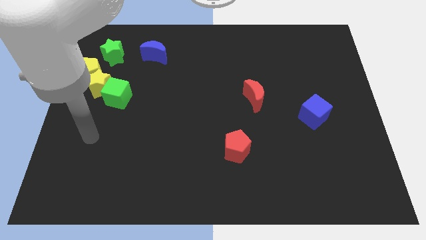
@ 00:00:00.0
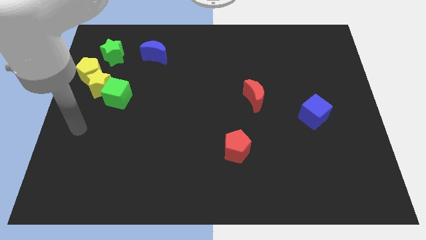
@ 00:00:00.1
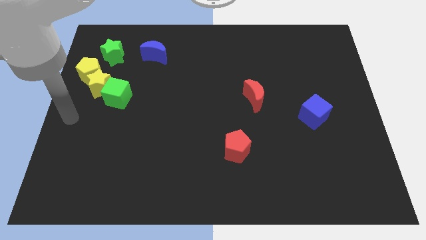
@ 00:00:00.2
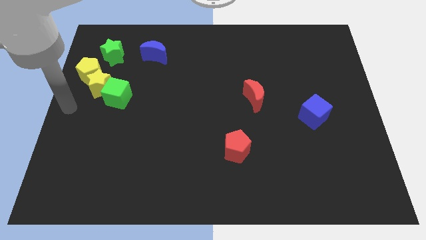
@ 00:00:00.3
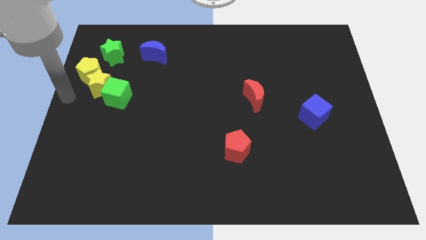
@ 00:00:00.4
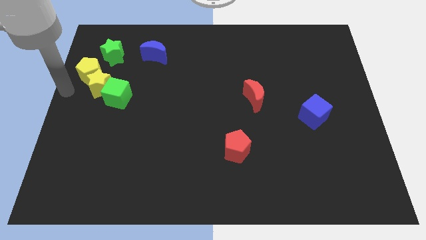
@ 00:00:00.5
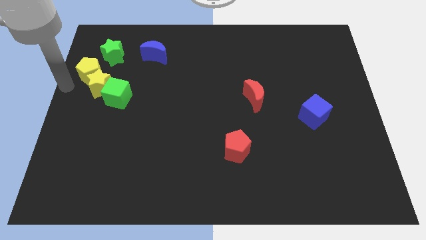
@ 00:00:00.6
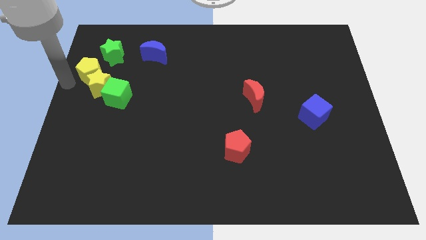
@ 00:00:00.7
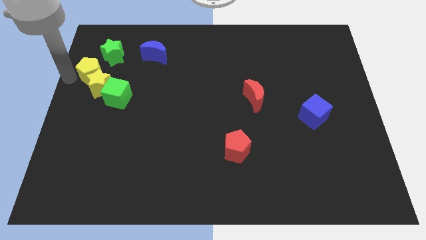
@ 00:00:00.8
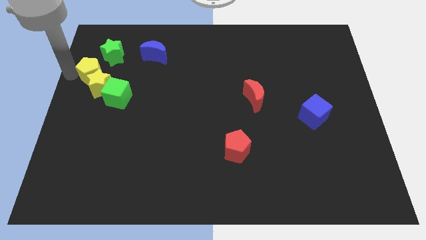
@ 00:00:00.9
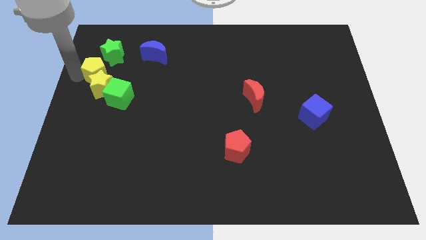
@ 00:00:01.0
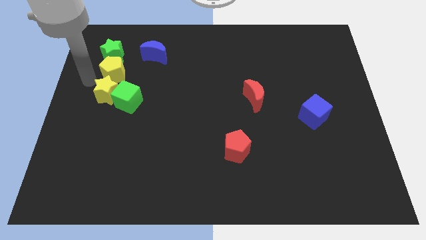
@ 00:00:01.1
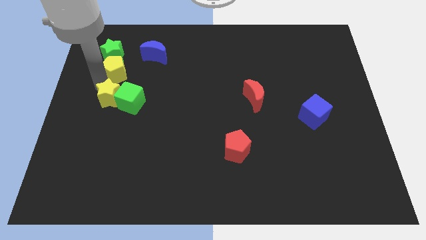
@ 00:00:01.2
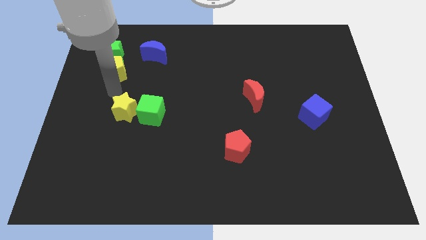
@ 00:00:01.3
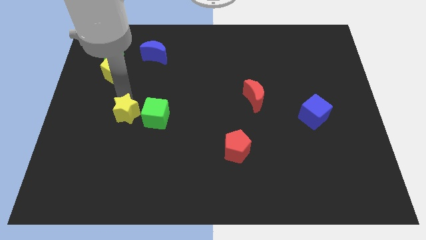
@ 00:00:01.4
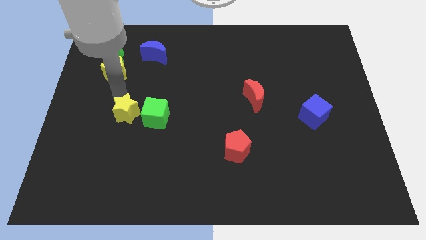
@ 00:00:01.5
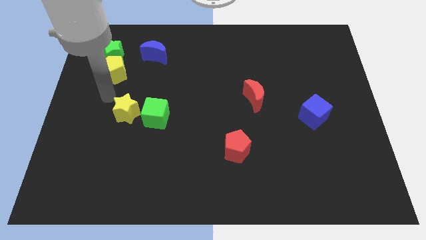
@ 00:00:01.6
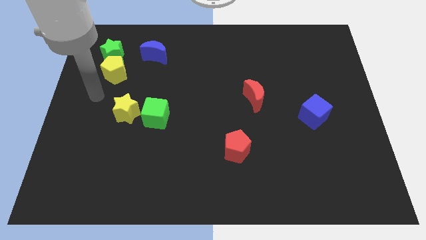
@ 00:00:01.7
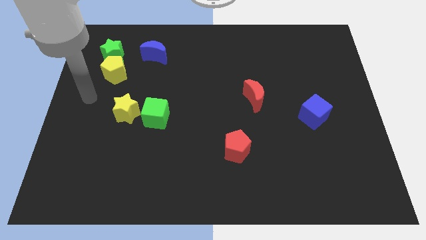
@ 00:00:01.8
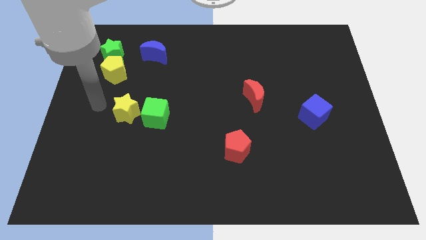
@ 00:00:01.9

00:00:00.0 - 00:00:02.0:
move the yellow star and green cube to the center side

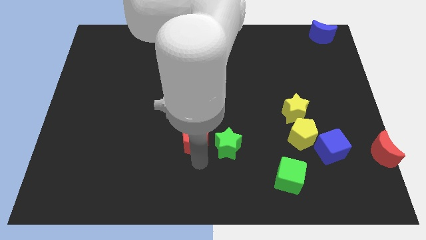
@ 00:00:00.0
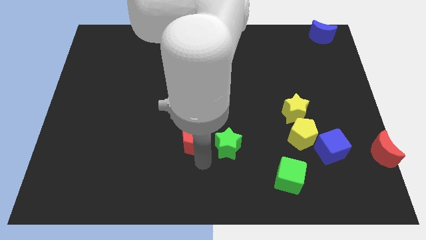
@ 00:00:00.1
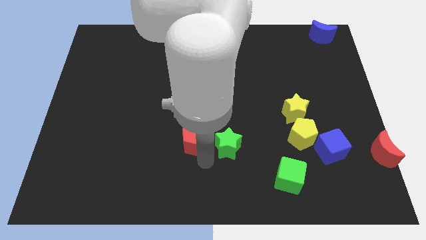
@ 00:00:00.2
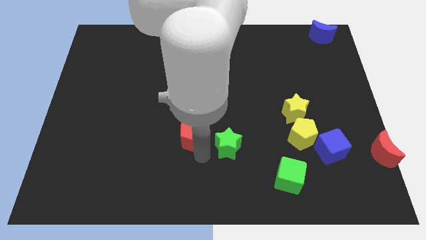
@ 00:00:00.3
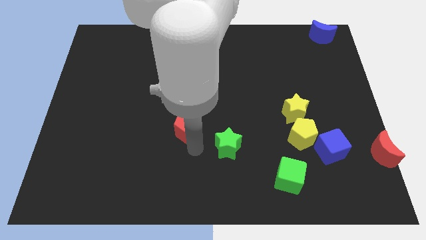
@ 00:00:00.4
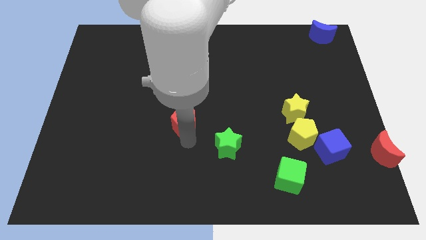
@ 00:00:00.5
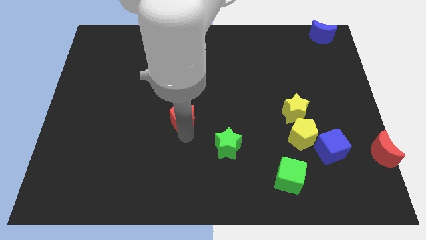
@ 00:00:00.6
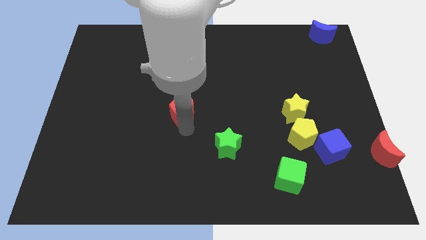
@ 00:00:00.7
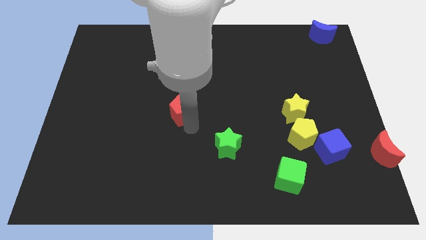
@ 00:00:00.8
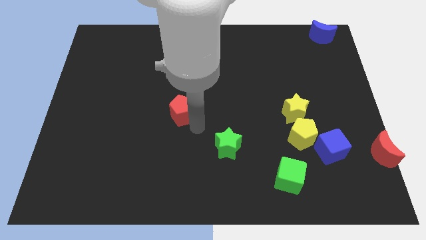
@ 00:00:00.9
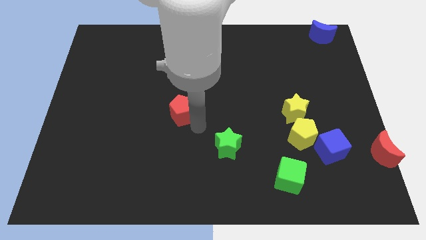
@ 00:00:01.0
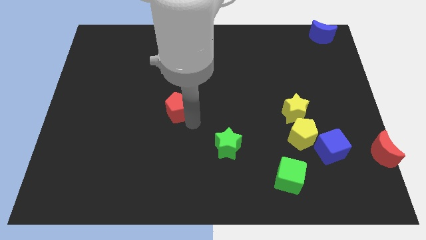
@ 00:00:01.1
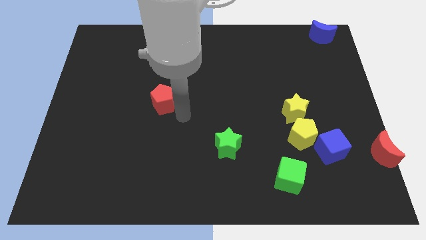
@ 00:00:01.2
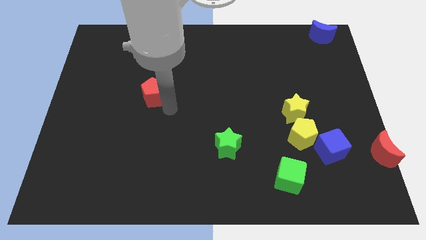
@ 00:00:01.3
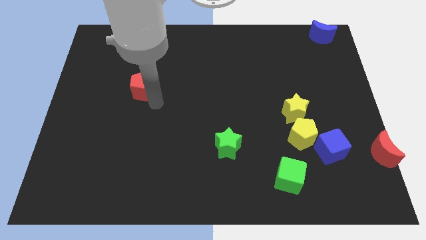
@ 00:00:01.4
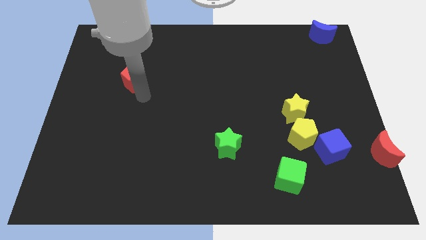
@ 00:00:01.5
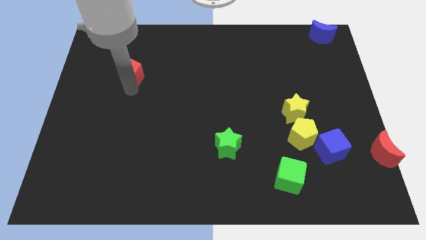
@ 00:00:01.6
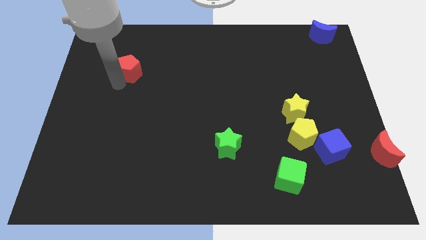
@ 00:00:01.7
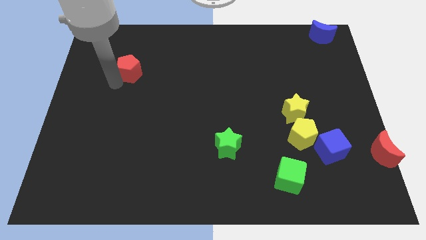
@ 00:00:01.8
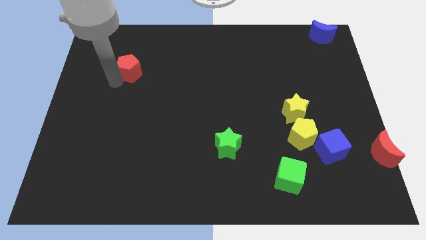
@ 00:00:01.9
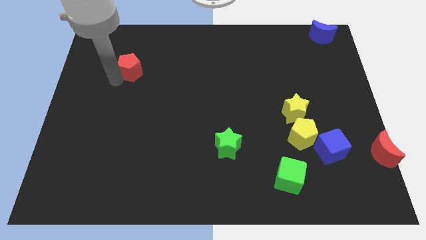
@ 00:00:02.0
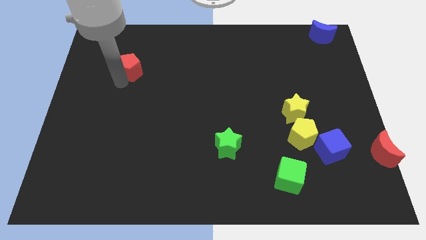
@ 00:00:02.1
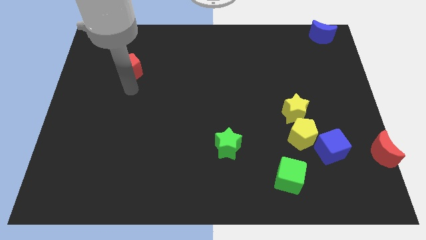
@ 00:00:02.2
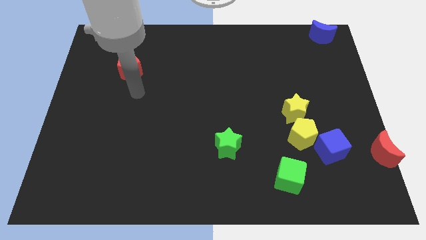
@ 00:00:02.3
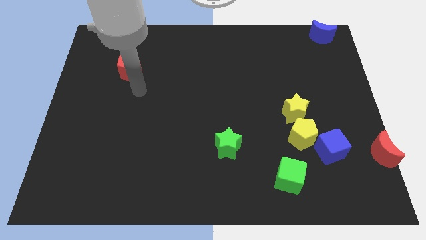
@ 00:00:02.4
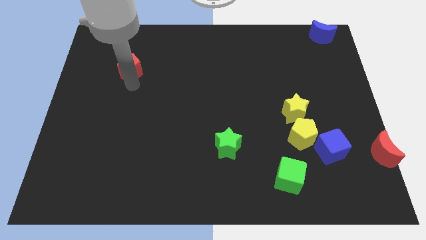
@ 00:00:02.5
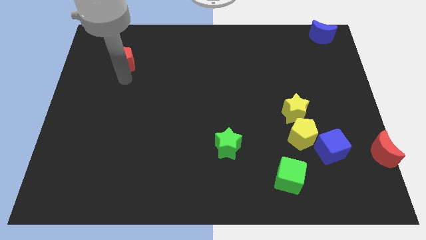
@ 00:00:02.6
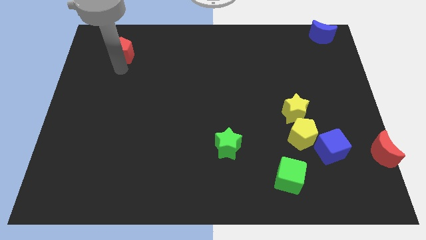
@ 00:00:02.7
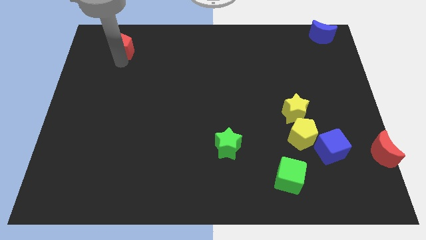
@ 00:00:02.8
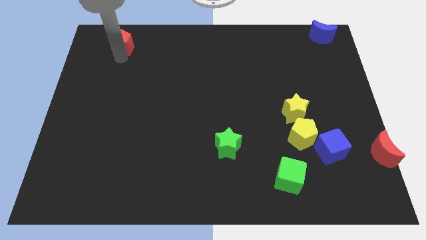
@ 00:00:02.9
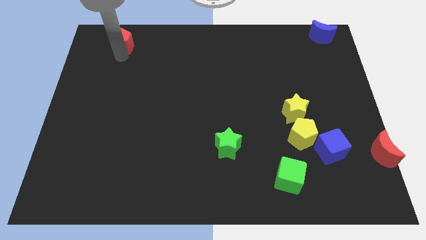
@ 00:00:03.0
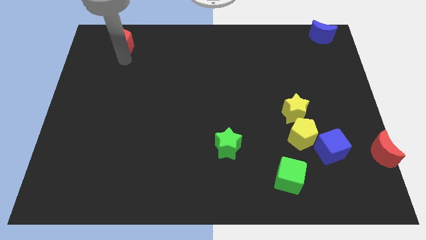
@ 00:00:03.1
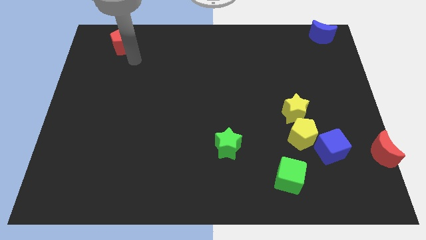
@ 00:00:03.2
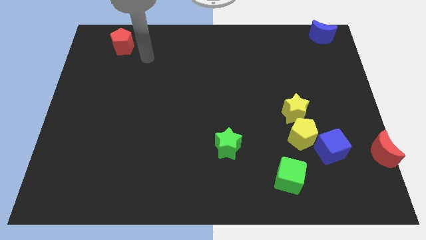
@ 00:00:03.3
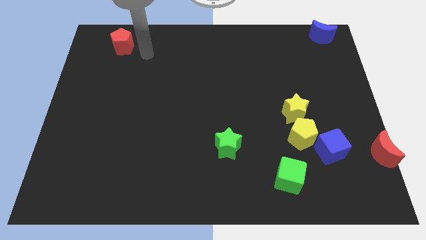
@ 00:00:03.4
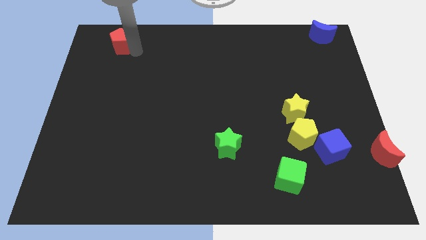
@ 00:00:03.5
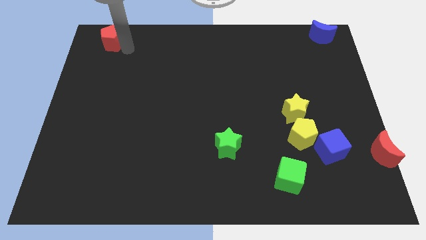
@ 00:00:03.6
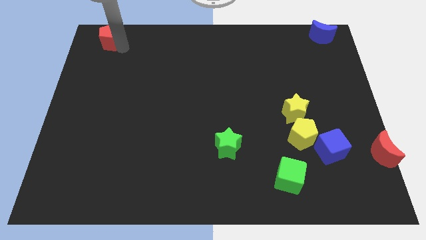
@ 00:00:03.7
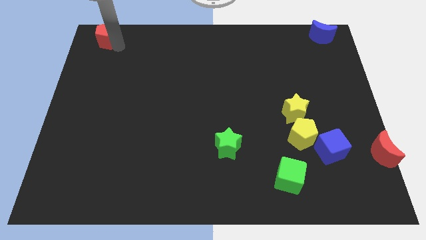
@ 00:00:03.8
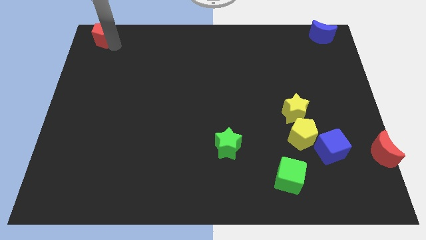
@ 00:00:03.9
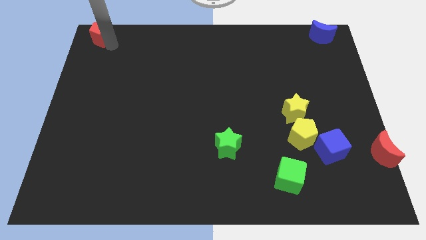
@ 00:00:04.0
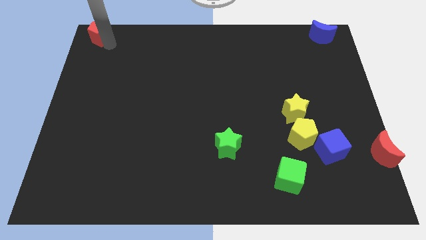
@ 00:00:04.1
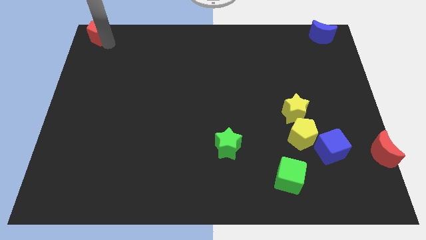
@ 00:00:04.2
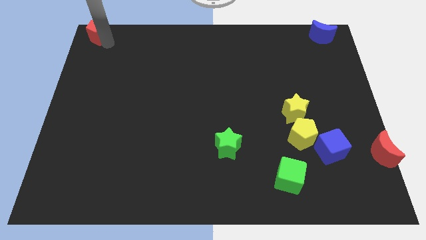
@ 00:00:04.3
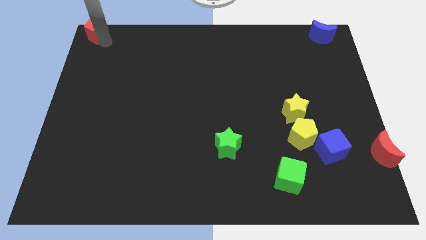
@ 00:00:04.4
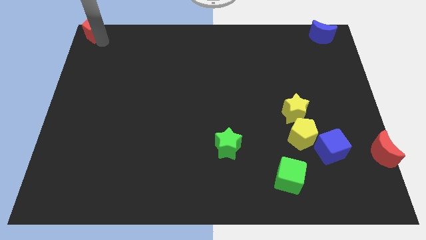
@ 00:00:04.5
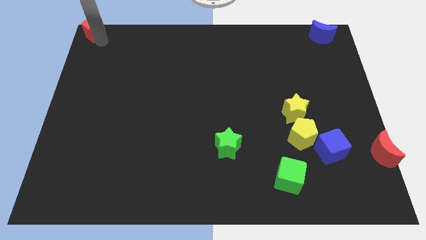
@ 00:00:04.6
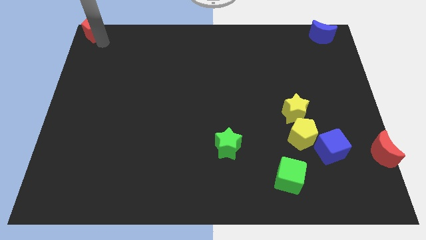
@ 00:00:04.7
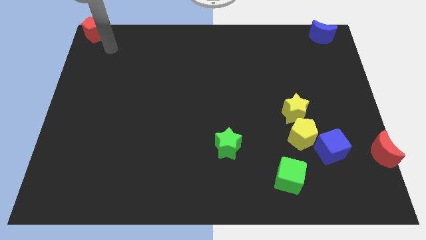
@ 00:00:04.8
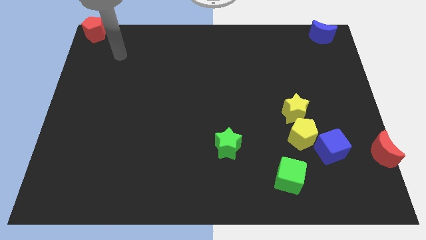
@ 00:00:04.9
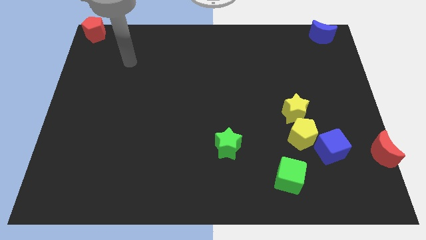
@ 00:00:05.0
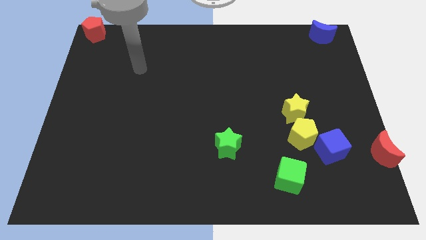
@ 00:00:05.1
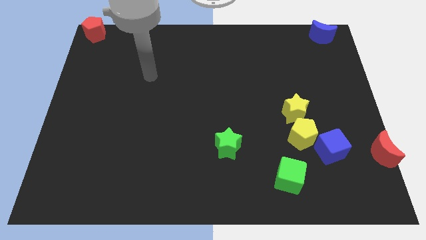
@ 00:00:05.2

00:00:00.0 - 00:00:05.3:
put the red pentagon to the top left corner of the board

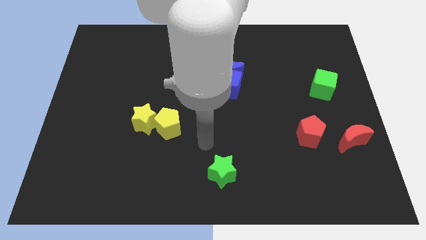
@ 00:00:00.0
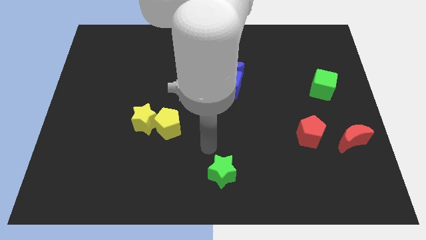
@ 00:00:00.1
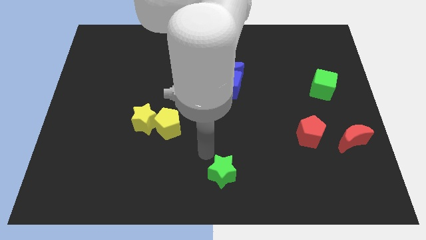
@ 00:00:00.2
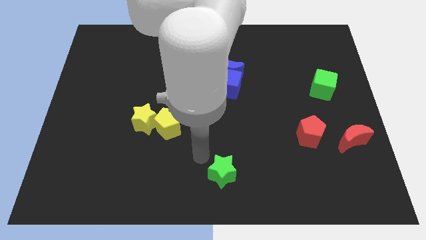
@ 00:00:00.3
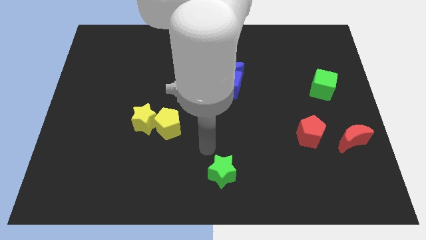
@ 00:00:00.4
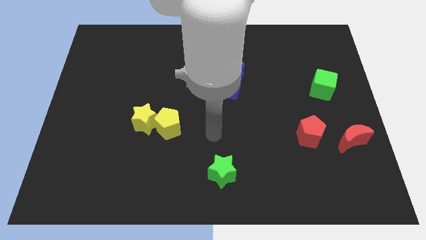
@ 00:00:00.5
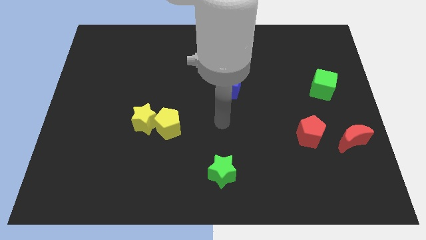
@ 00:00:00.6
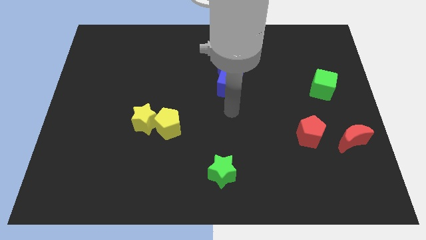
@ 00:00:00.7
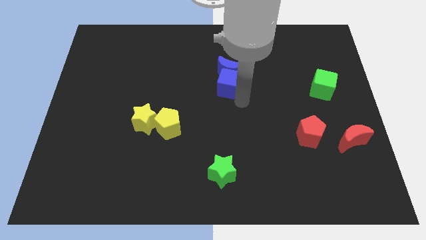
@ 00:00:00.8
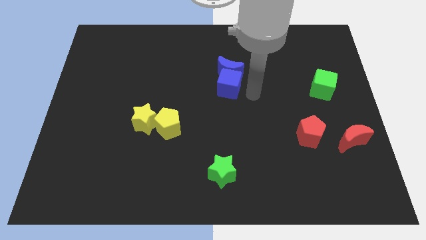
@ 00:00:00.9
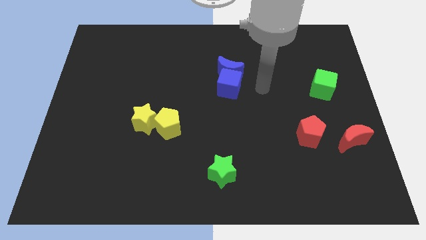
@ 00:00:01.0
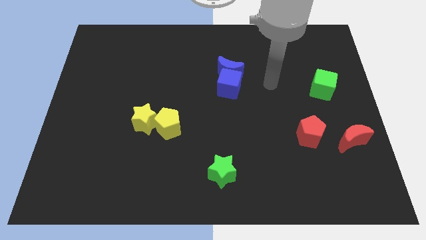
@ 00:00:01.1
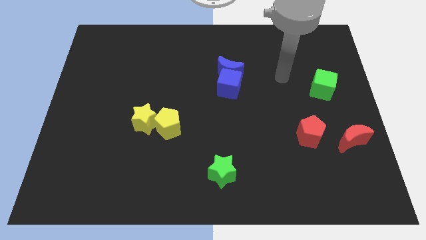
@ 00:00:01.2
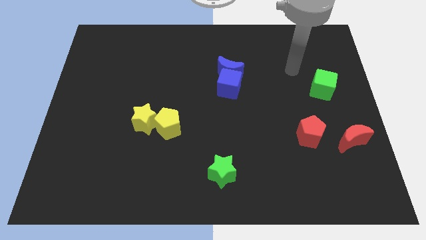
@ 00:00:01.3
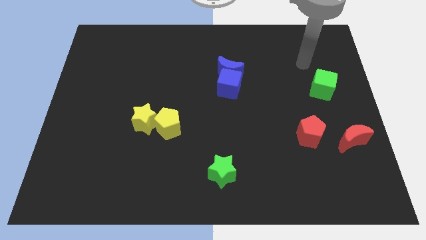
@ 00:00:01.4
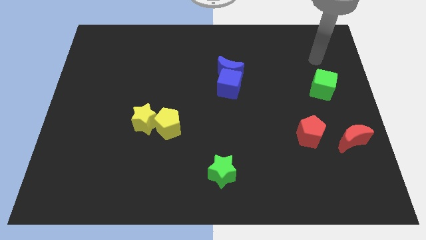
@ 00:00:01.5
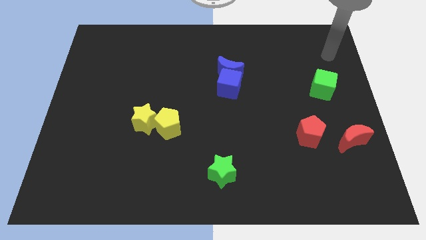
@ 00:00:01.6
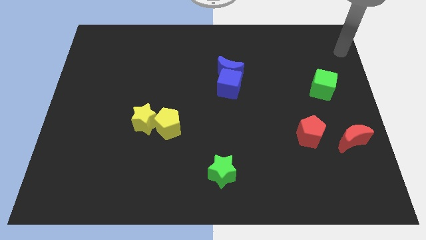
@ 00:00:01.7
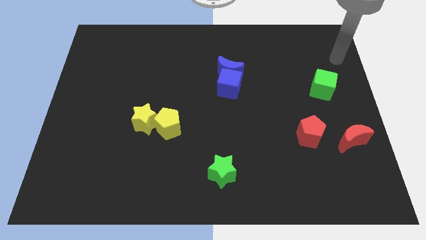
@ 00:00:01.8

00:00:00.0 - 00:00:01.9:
move your arm from center to top right corner side
